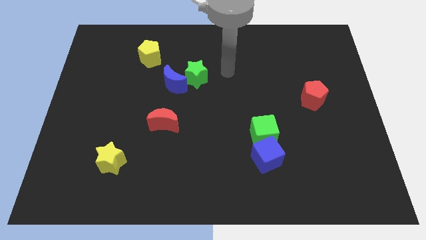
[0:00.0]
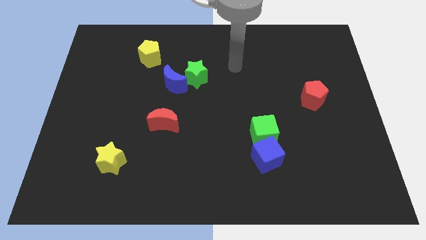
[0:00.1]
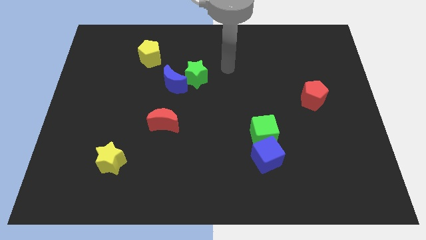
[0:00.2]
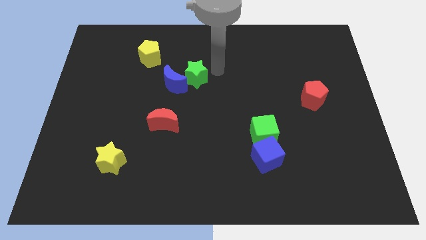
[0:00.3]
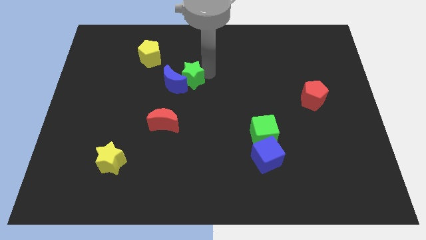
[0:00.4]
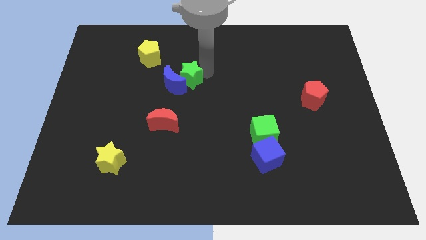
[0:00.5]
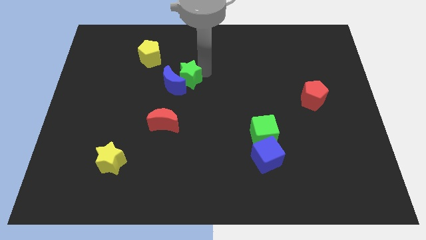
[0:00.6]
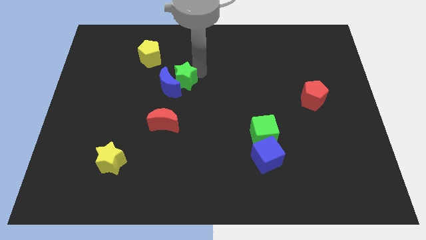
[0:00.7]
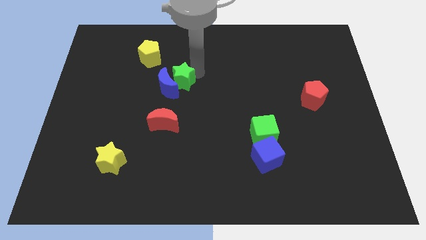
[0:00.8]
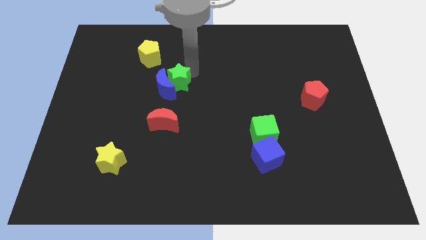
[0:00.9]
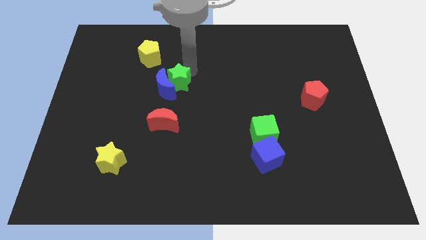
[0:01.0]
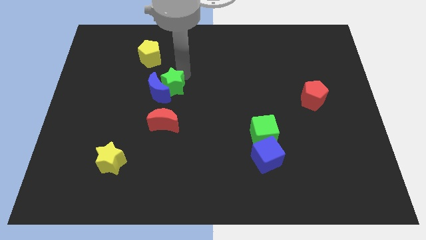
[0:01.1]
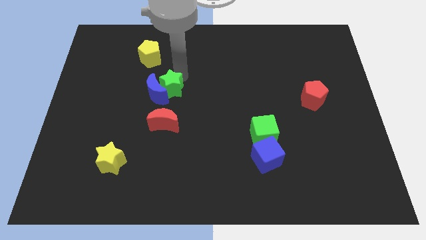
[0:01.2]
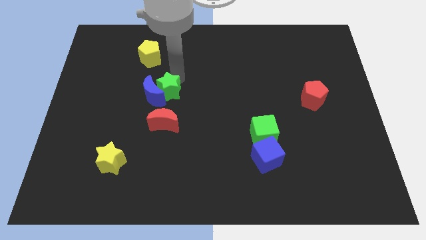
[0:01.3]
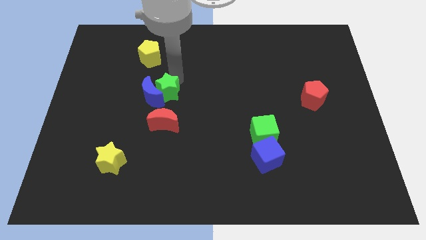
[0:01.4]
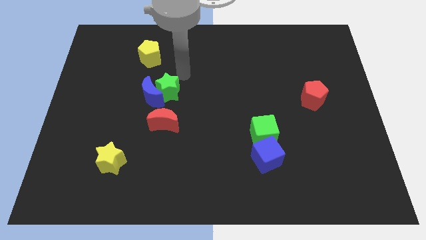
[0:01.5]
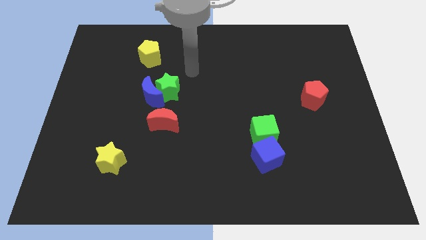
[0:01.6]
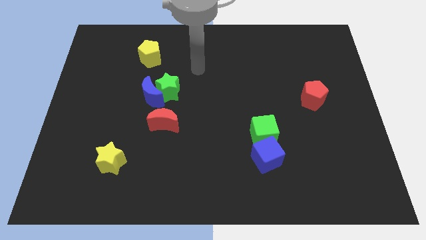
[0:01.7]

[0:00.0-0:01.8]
push the green star and blue moon to the top of red moon

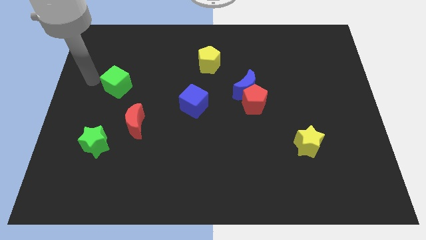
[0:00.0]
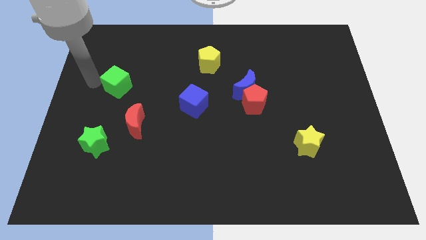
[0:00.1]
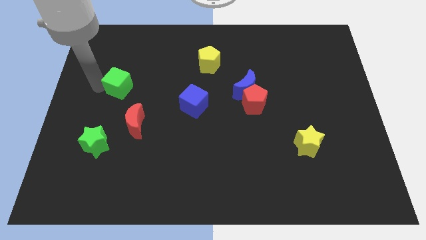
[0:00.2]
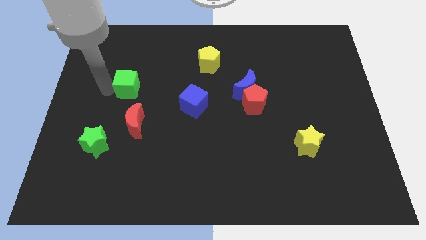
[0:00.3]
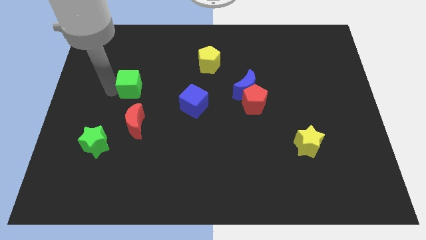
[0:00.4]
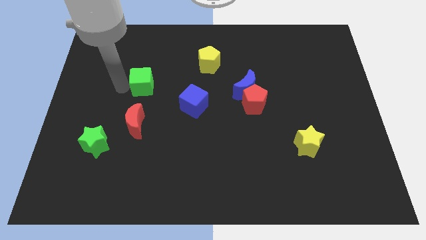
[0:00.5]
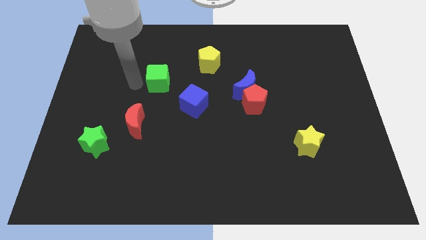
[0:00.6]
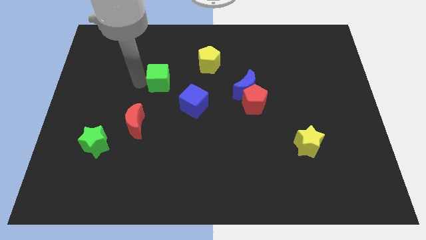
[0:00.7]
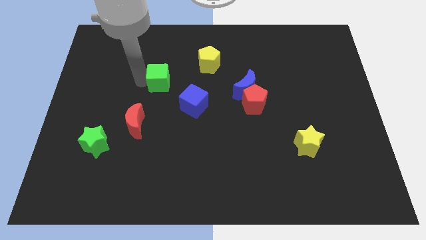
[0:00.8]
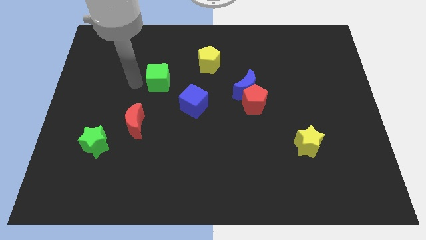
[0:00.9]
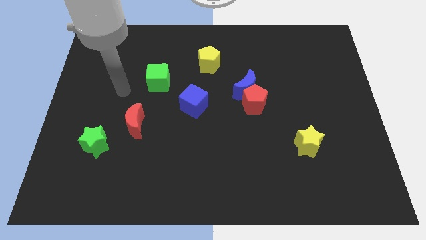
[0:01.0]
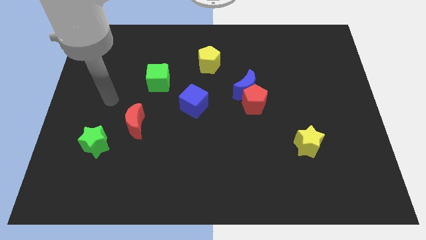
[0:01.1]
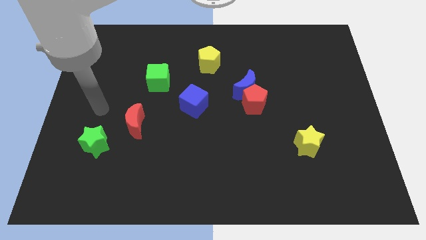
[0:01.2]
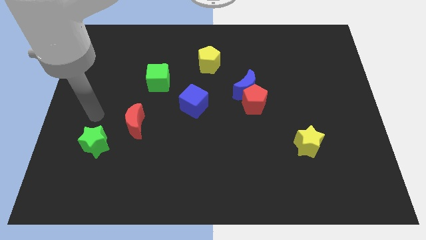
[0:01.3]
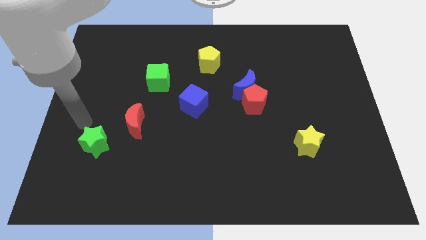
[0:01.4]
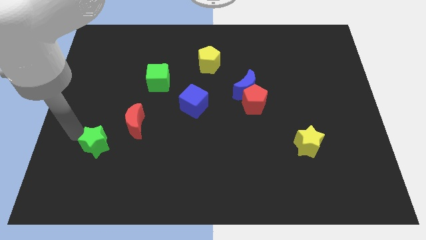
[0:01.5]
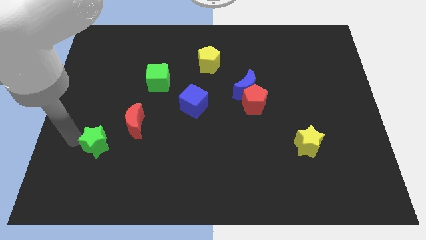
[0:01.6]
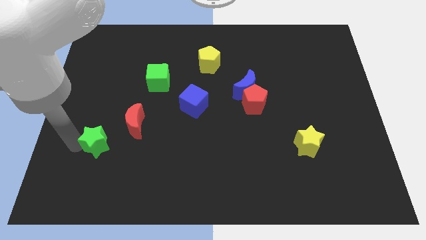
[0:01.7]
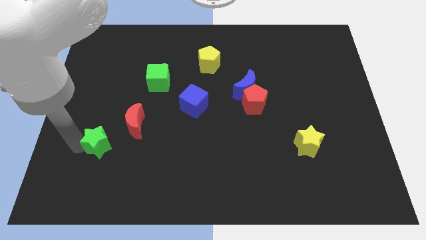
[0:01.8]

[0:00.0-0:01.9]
push the green cube diagonally on the top right side of the red crescent

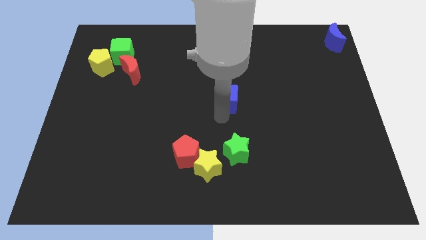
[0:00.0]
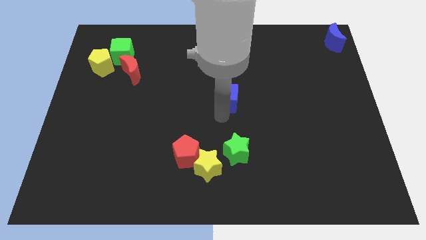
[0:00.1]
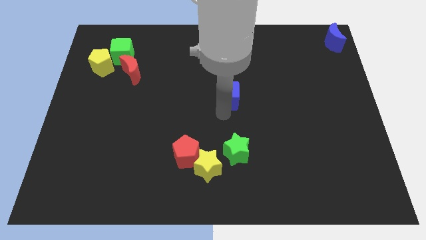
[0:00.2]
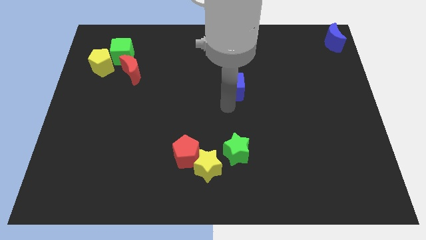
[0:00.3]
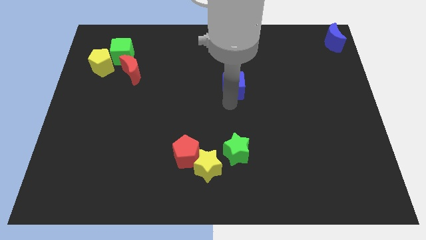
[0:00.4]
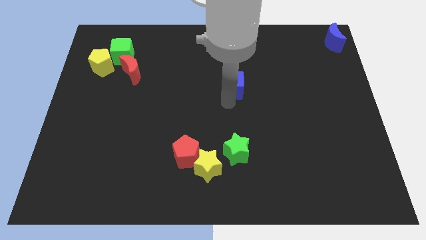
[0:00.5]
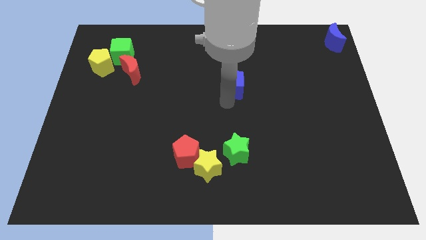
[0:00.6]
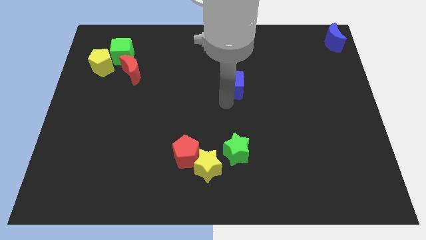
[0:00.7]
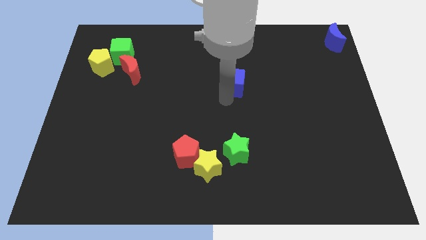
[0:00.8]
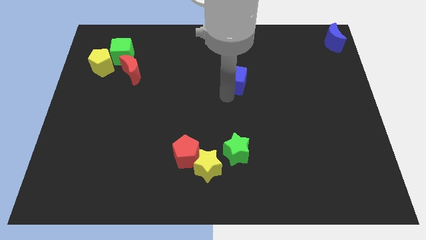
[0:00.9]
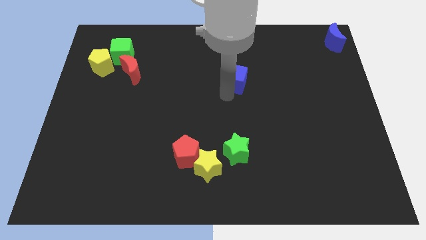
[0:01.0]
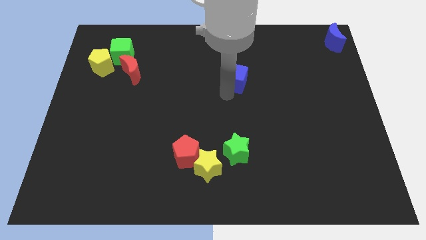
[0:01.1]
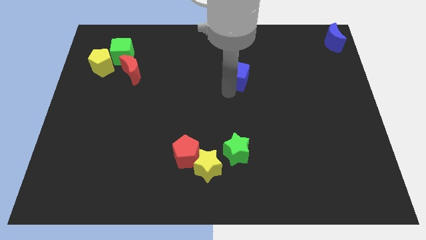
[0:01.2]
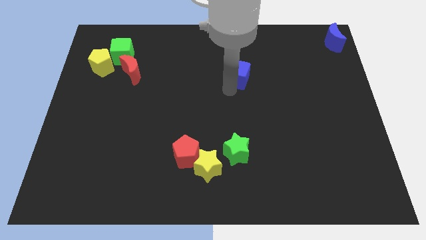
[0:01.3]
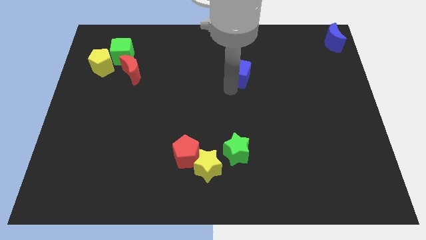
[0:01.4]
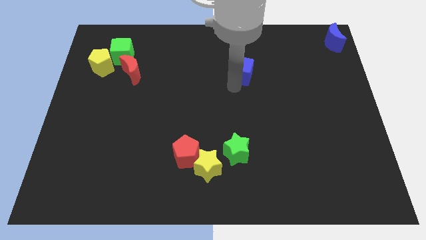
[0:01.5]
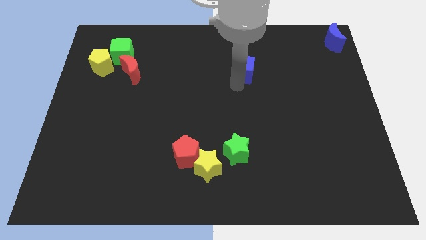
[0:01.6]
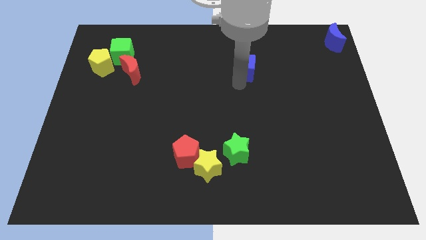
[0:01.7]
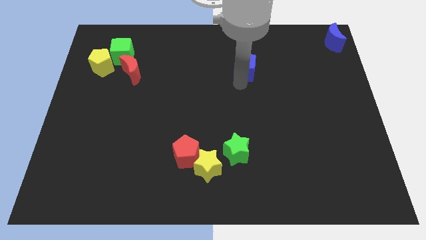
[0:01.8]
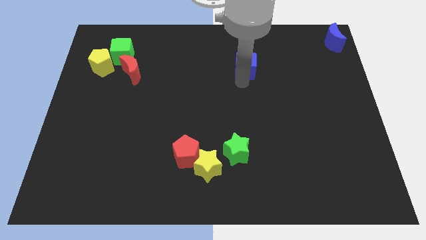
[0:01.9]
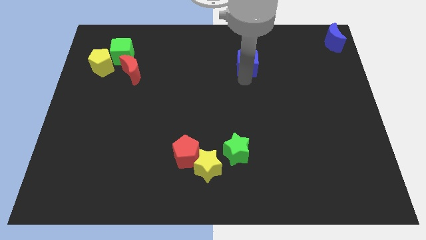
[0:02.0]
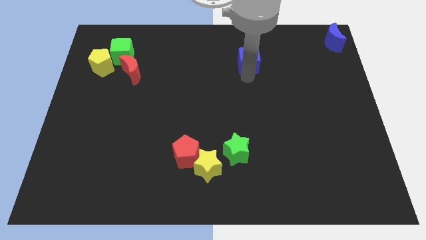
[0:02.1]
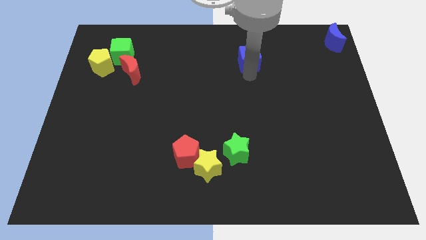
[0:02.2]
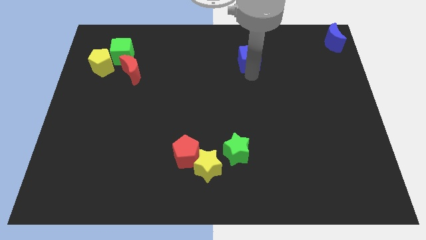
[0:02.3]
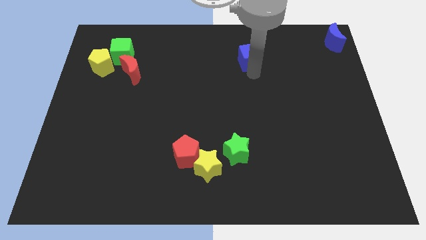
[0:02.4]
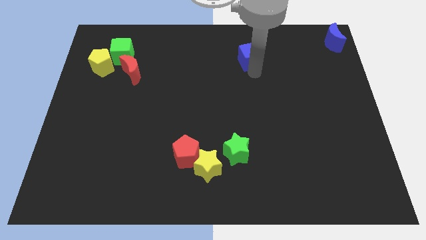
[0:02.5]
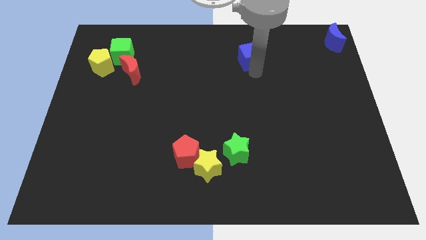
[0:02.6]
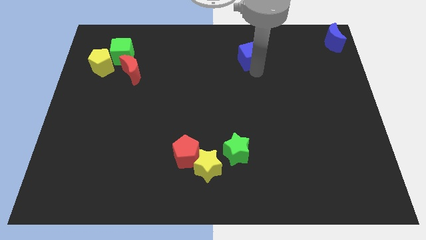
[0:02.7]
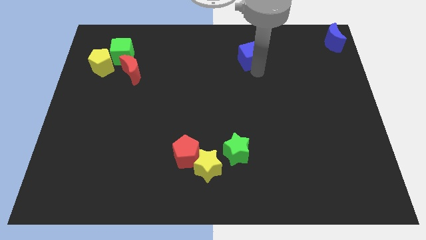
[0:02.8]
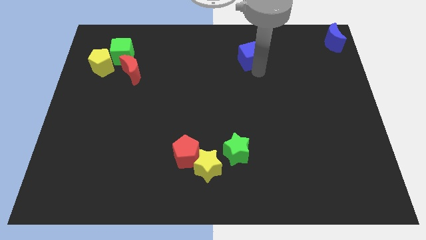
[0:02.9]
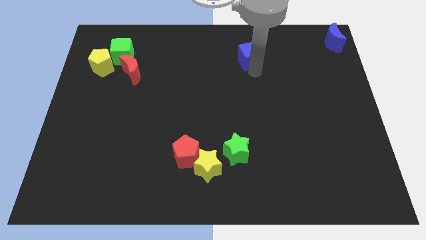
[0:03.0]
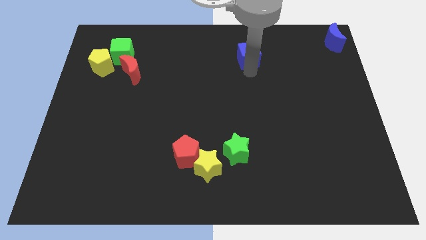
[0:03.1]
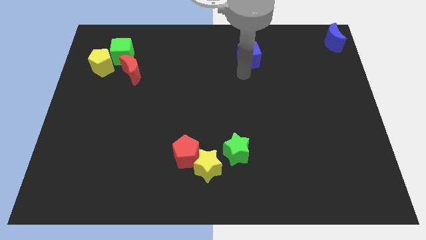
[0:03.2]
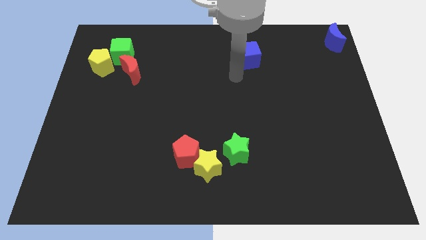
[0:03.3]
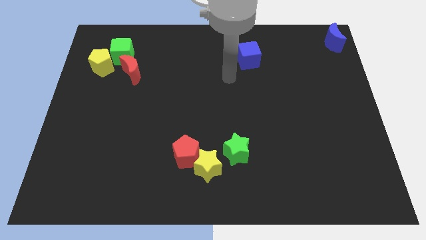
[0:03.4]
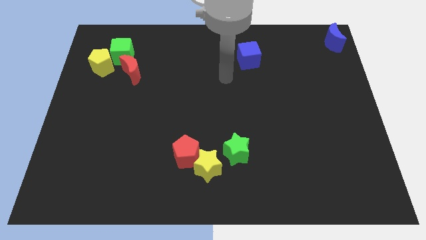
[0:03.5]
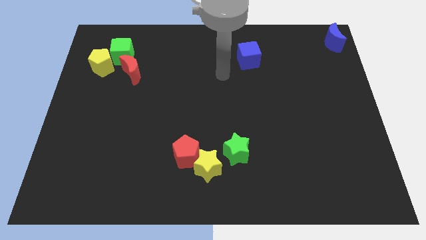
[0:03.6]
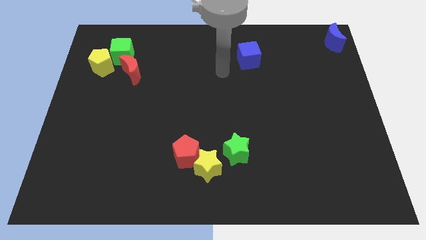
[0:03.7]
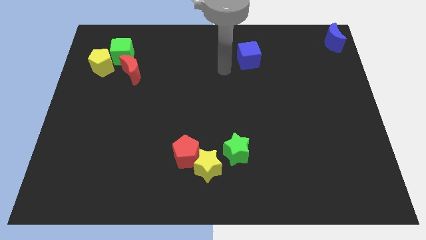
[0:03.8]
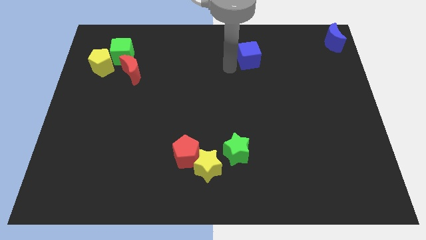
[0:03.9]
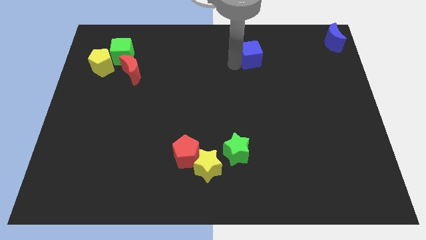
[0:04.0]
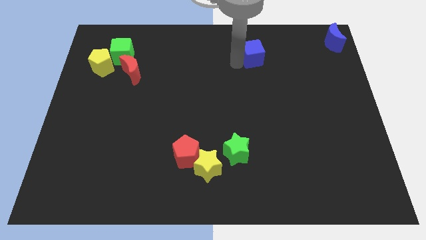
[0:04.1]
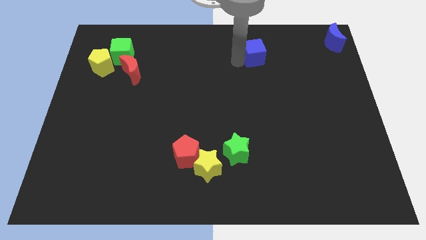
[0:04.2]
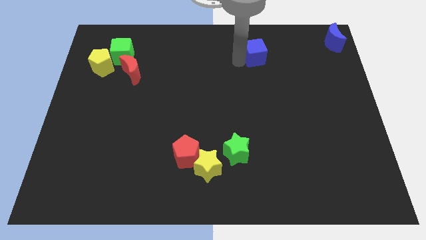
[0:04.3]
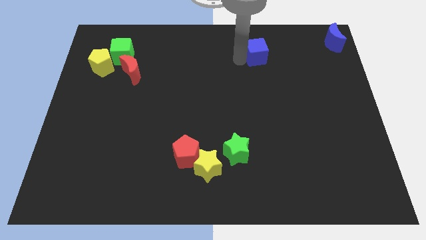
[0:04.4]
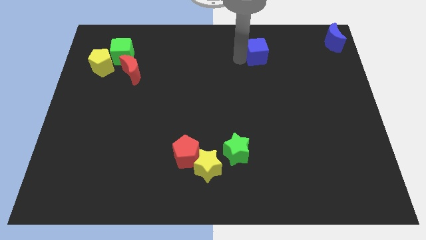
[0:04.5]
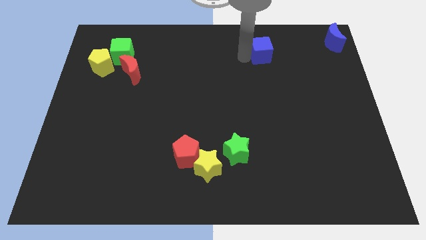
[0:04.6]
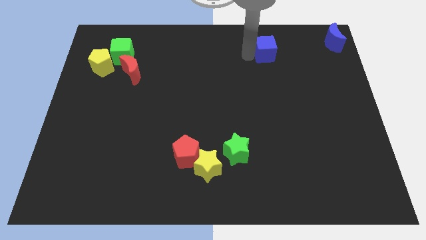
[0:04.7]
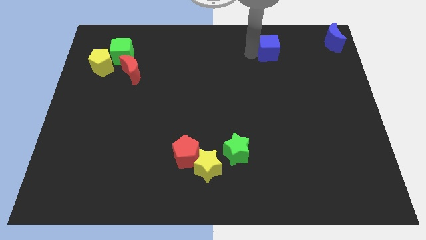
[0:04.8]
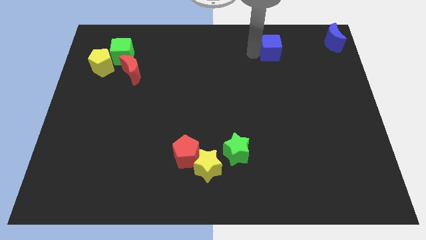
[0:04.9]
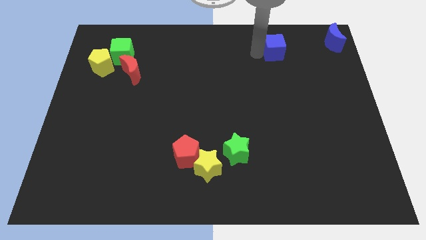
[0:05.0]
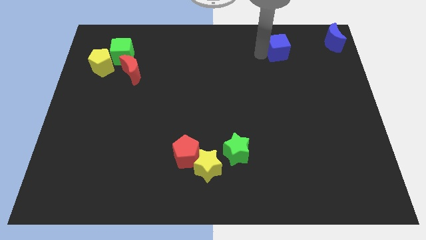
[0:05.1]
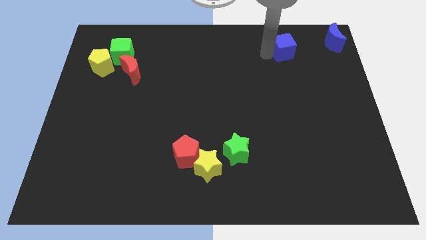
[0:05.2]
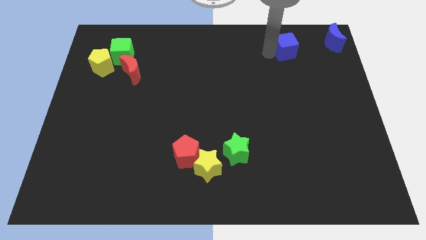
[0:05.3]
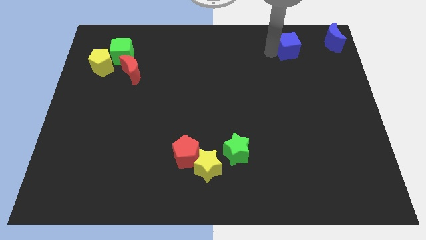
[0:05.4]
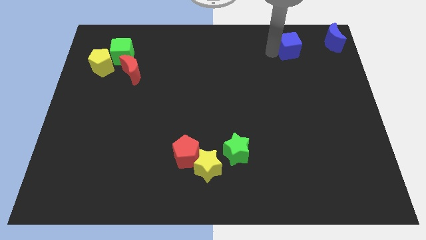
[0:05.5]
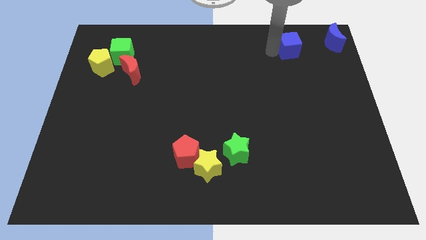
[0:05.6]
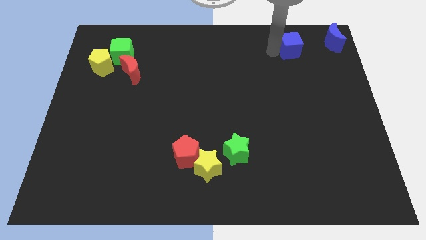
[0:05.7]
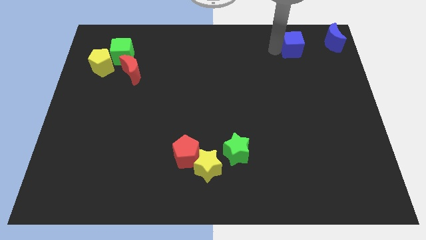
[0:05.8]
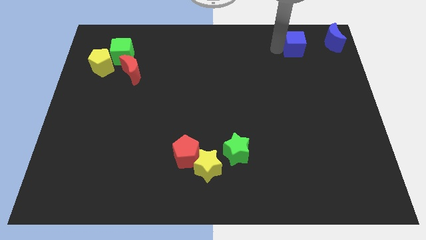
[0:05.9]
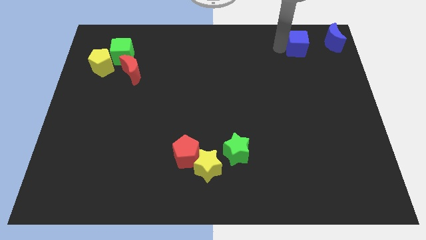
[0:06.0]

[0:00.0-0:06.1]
move blue cube to the left of blue moon
